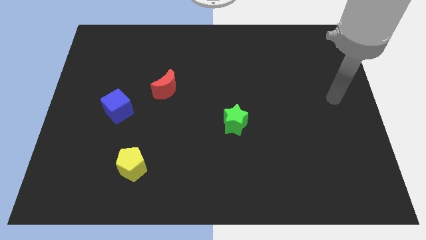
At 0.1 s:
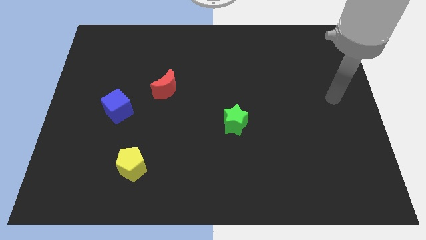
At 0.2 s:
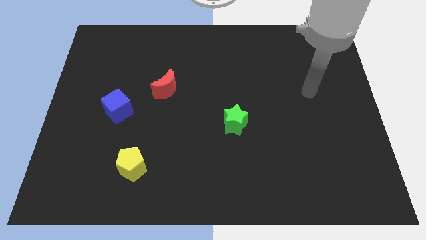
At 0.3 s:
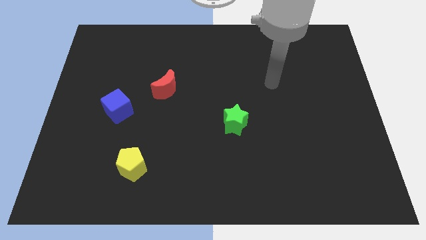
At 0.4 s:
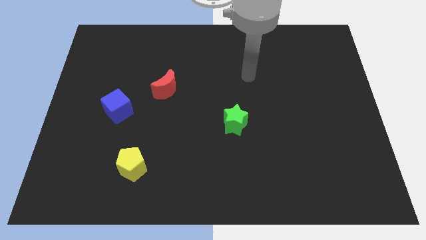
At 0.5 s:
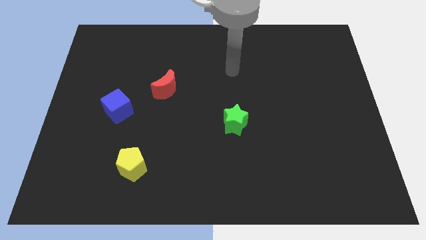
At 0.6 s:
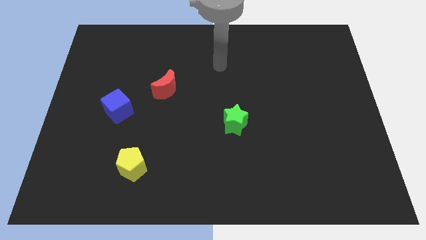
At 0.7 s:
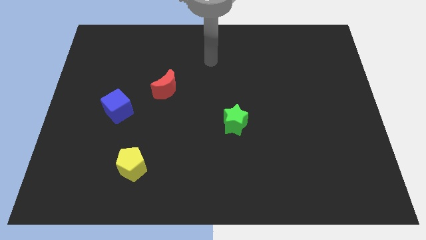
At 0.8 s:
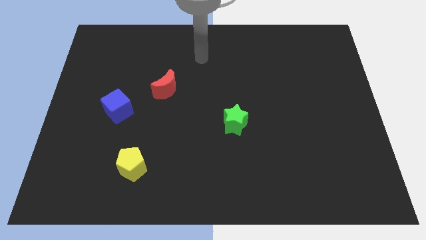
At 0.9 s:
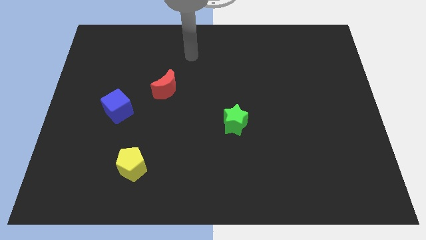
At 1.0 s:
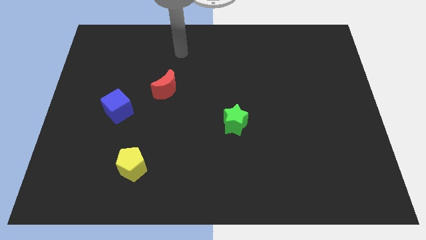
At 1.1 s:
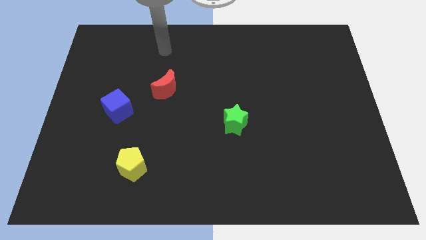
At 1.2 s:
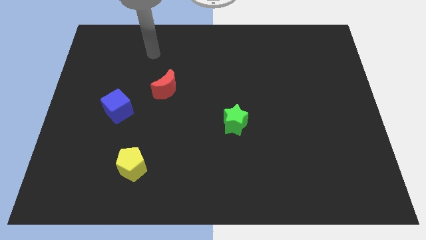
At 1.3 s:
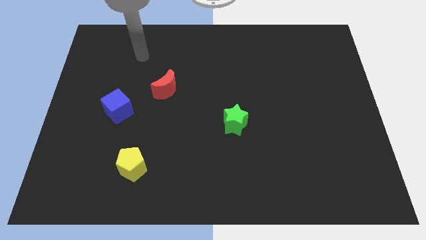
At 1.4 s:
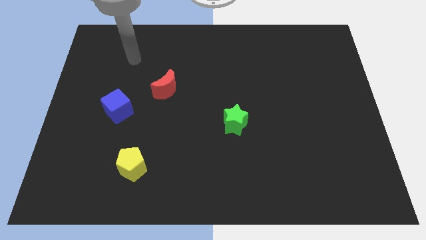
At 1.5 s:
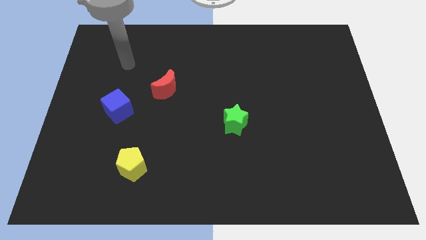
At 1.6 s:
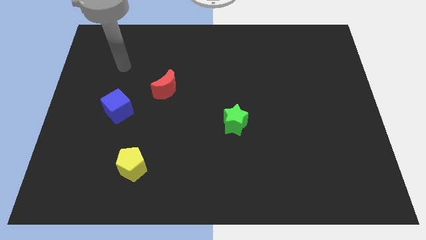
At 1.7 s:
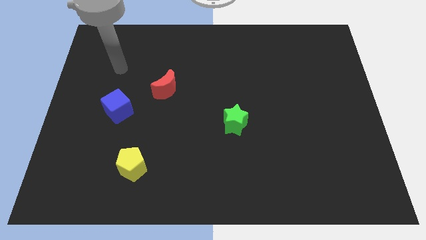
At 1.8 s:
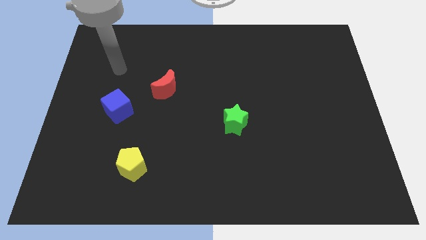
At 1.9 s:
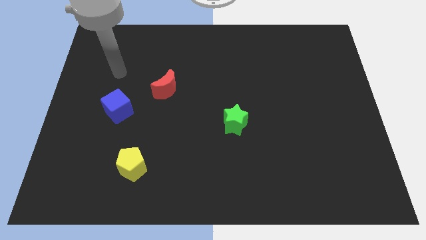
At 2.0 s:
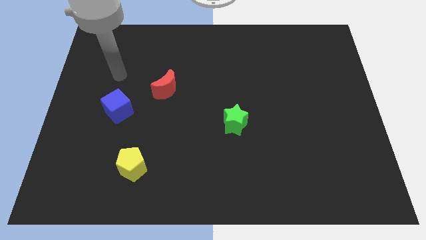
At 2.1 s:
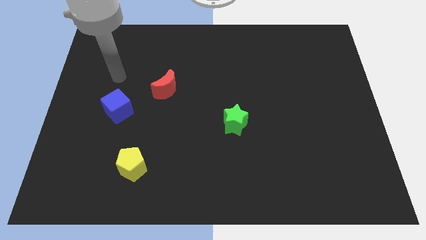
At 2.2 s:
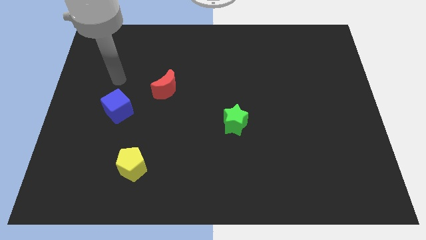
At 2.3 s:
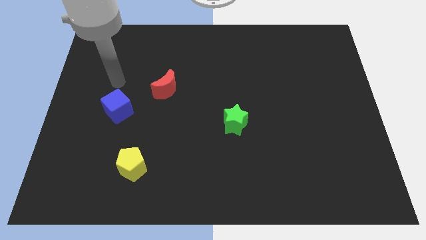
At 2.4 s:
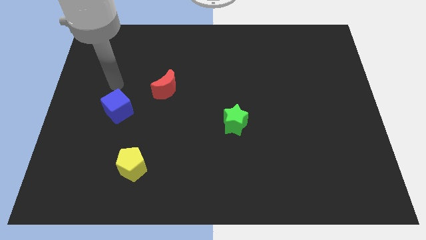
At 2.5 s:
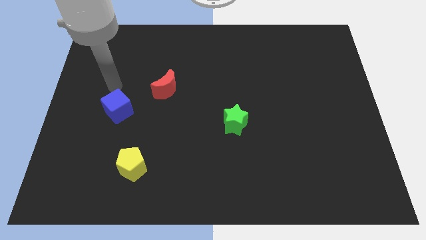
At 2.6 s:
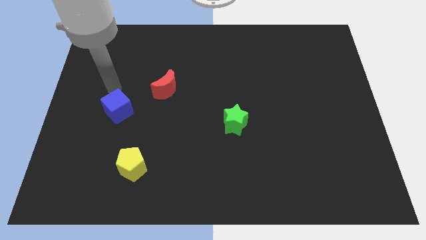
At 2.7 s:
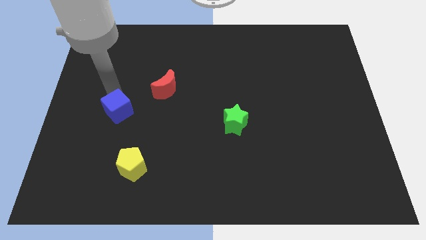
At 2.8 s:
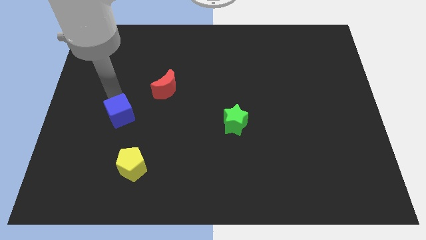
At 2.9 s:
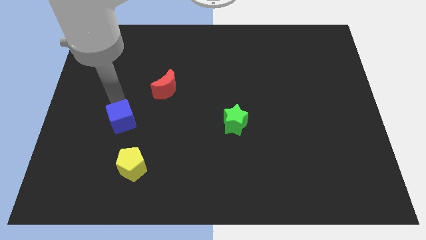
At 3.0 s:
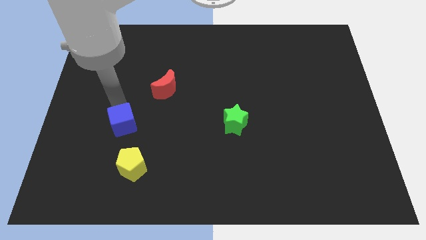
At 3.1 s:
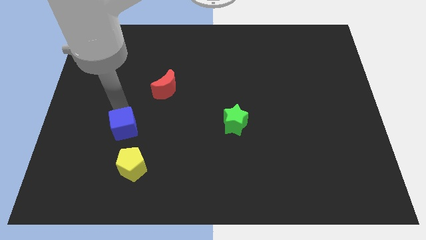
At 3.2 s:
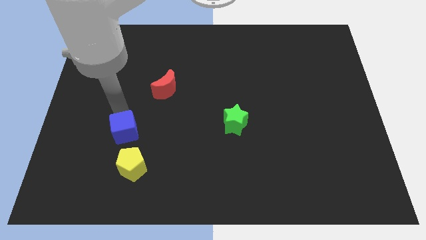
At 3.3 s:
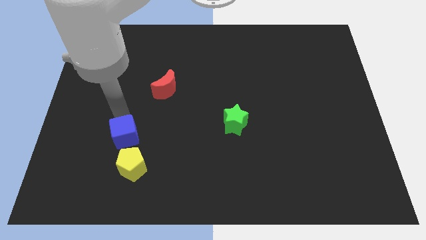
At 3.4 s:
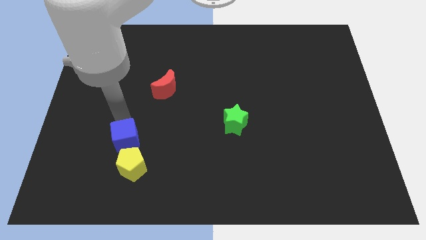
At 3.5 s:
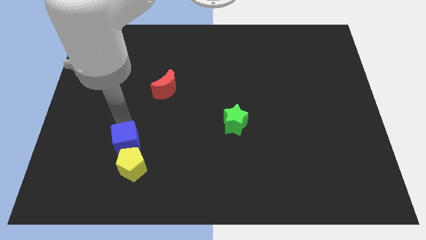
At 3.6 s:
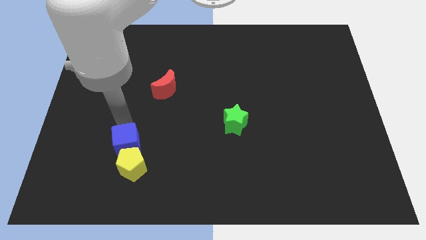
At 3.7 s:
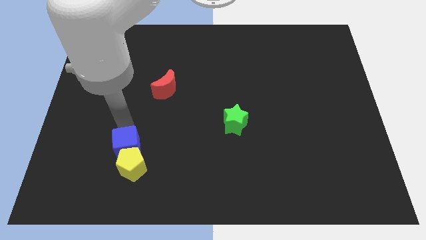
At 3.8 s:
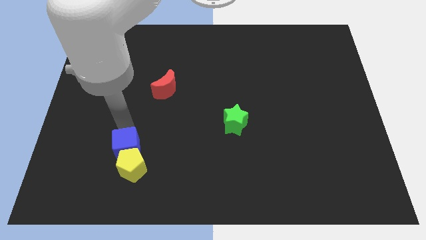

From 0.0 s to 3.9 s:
move the cube close to the yellow pentagon

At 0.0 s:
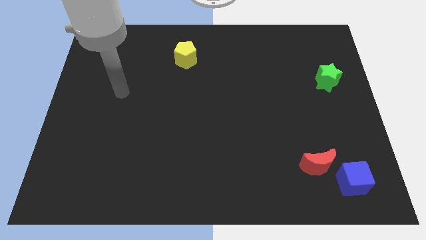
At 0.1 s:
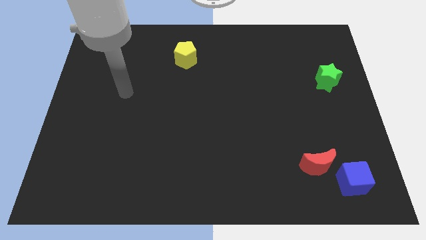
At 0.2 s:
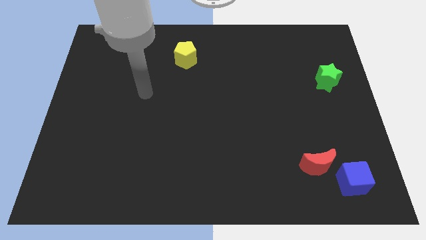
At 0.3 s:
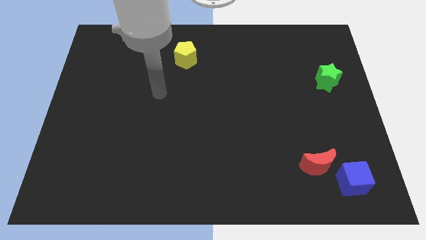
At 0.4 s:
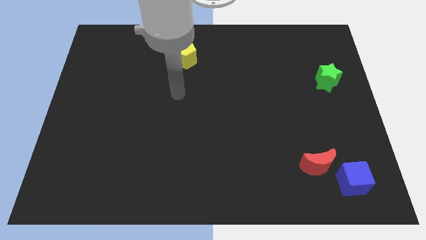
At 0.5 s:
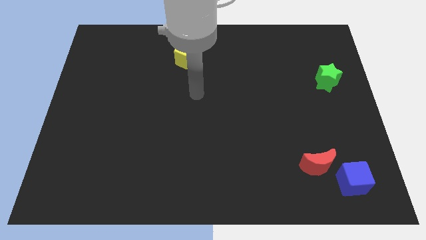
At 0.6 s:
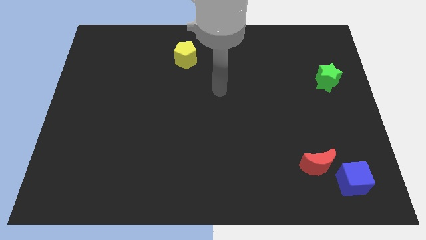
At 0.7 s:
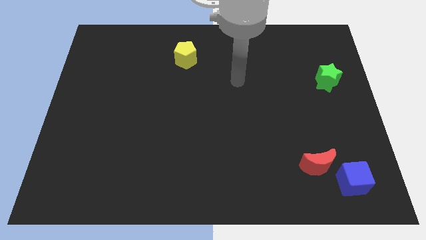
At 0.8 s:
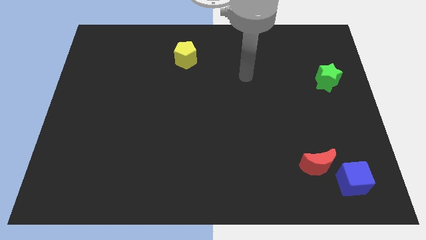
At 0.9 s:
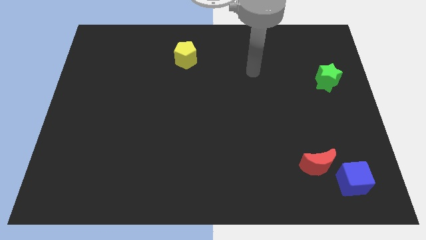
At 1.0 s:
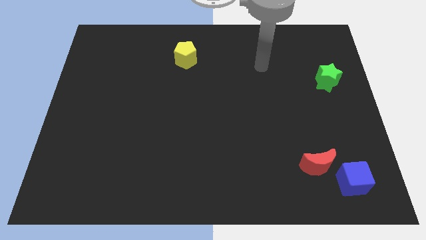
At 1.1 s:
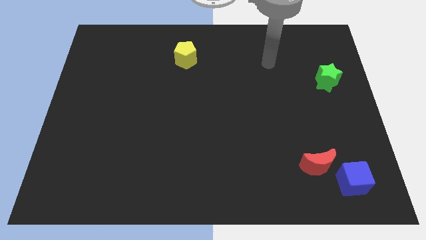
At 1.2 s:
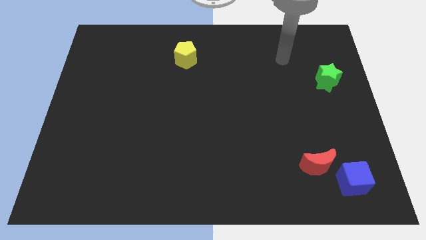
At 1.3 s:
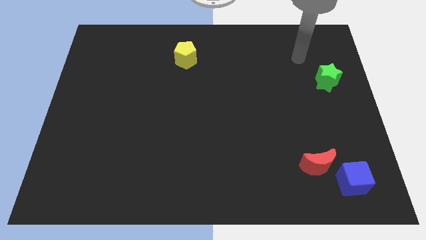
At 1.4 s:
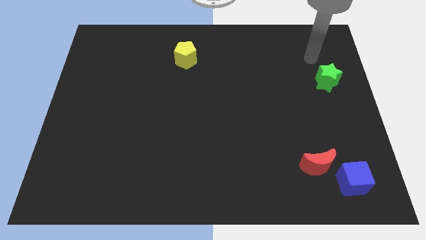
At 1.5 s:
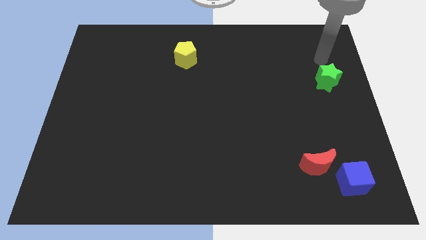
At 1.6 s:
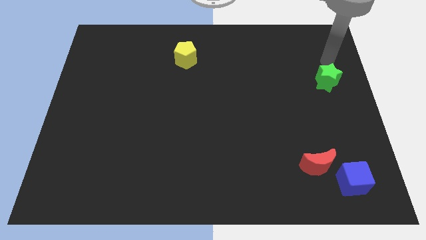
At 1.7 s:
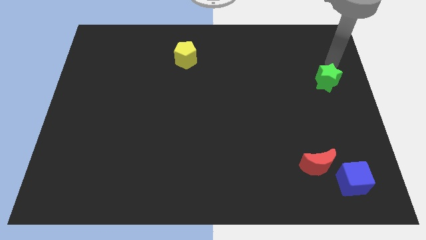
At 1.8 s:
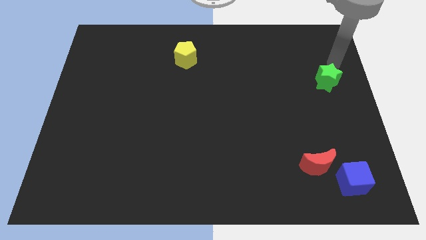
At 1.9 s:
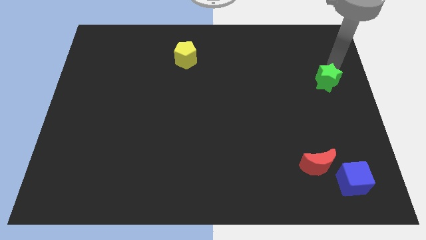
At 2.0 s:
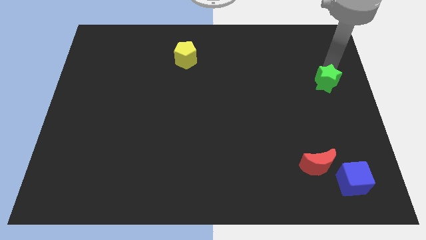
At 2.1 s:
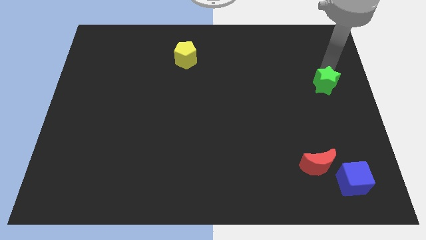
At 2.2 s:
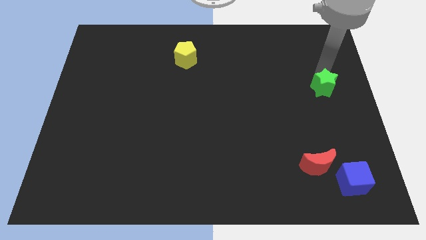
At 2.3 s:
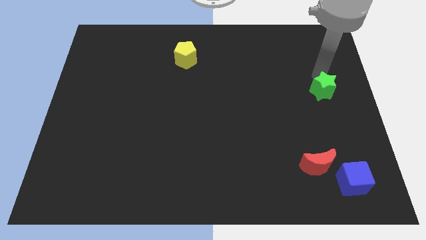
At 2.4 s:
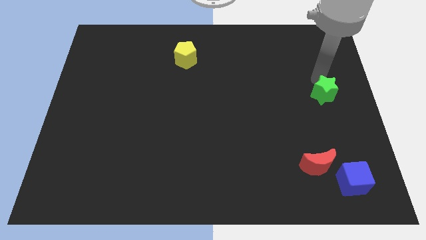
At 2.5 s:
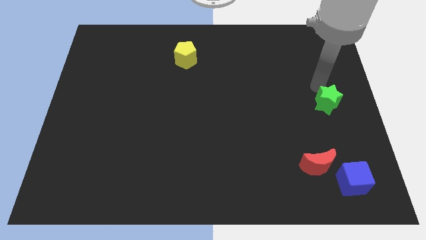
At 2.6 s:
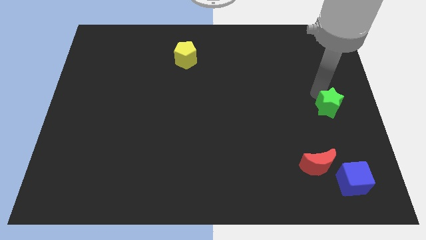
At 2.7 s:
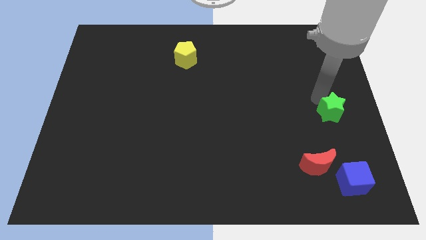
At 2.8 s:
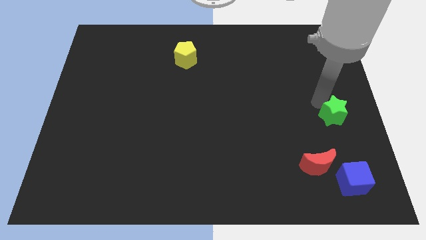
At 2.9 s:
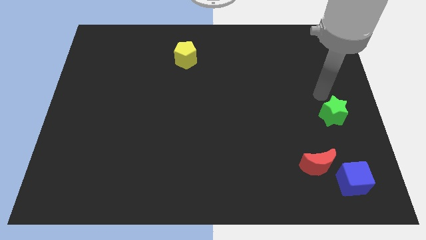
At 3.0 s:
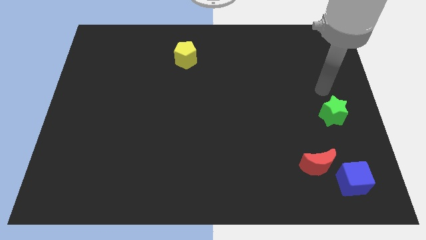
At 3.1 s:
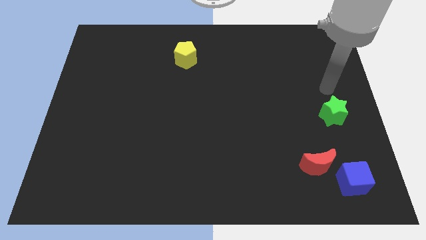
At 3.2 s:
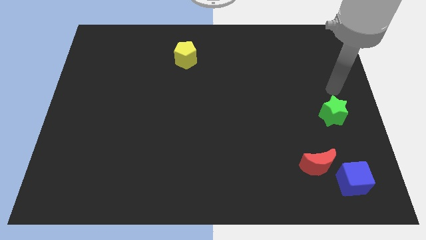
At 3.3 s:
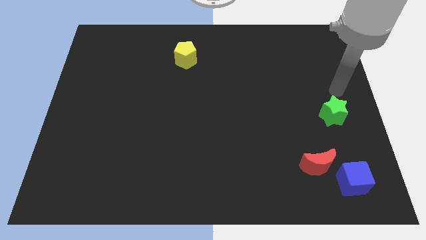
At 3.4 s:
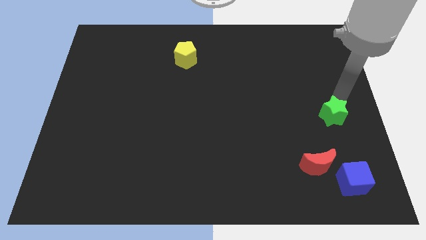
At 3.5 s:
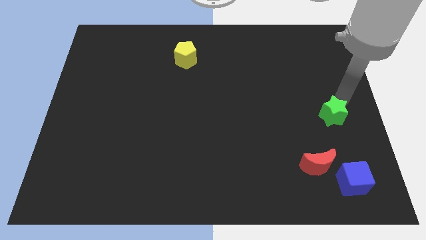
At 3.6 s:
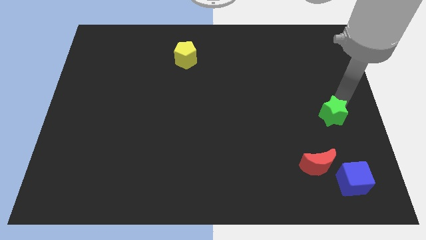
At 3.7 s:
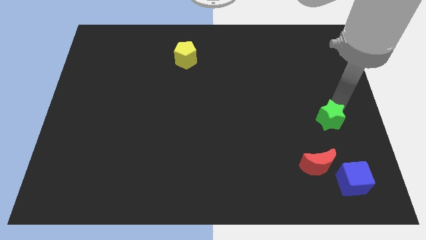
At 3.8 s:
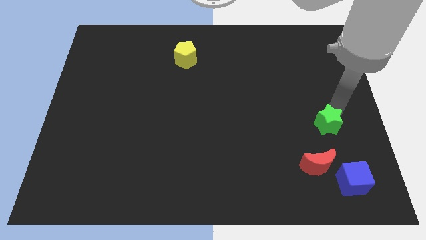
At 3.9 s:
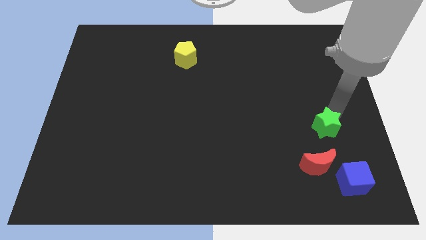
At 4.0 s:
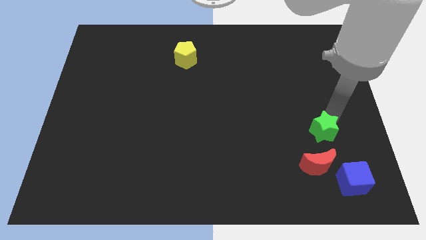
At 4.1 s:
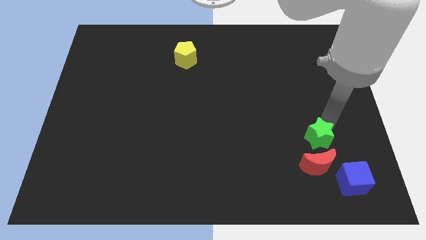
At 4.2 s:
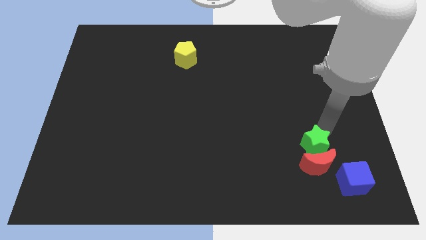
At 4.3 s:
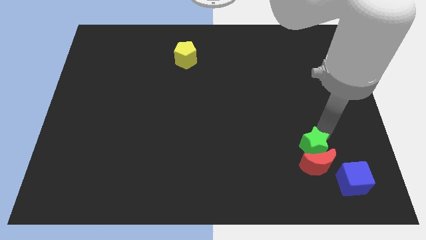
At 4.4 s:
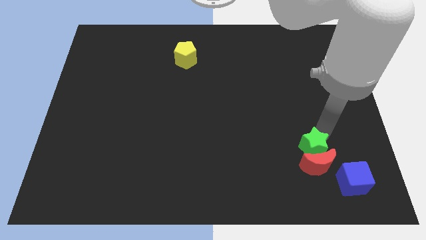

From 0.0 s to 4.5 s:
push the green star towards the moon
